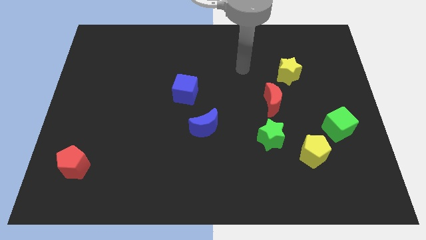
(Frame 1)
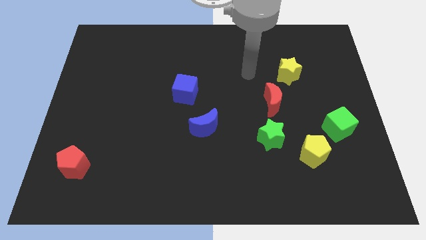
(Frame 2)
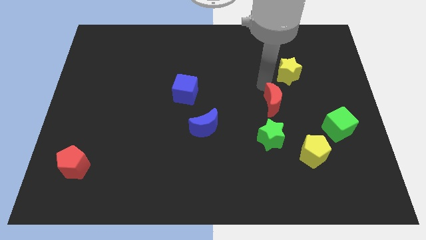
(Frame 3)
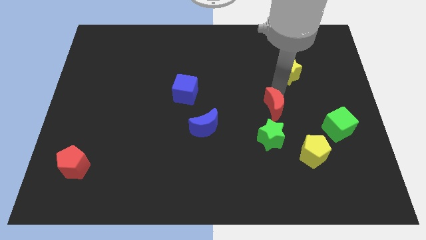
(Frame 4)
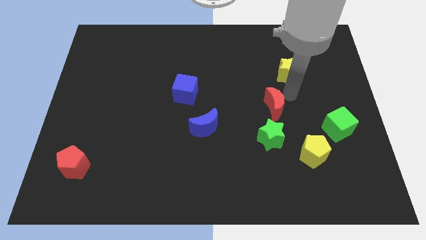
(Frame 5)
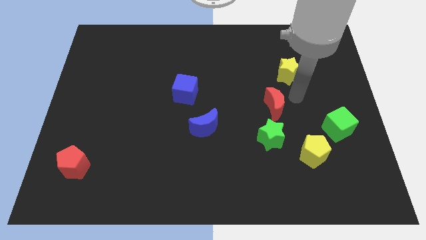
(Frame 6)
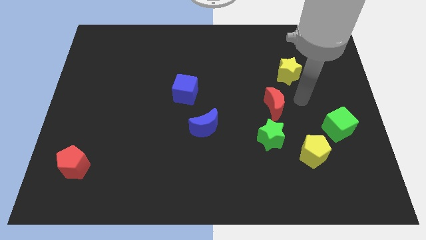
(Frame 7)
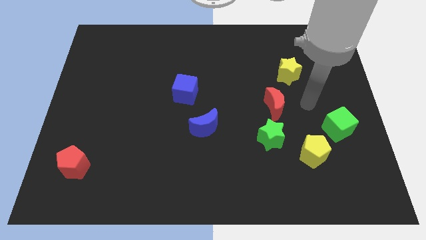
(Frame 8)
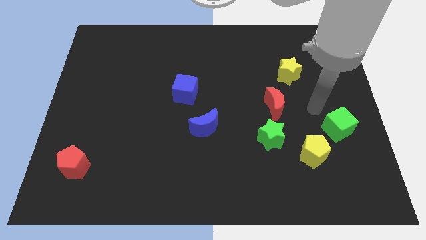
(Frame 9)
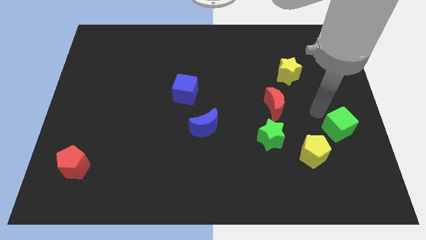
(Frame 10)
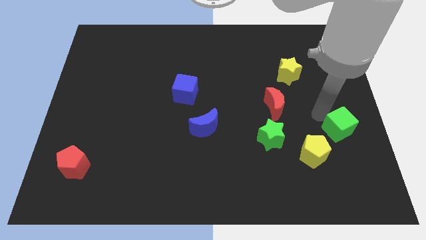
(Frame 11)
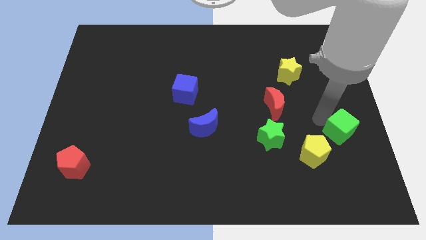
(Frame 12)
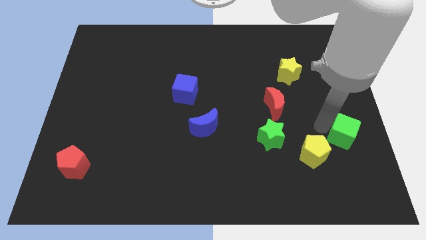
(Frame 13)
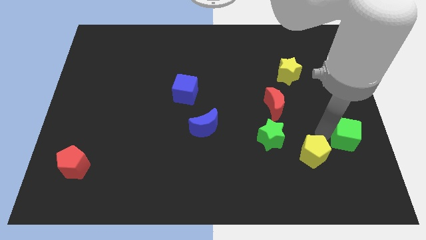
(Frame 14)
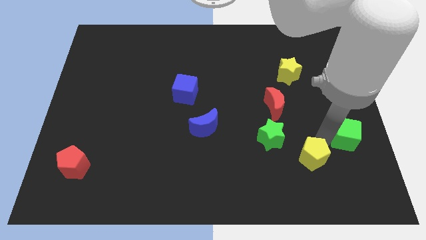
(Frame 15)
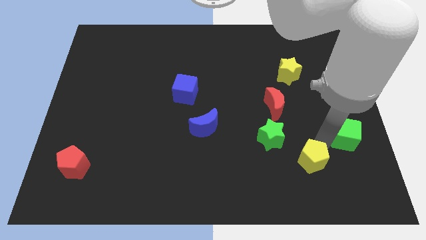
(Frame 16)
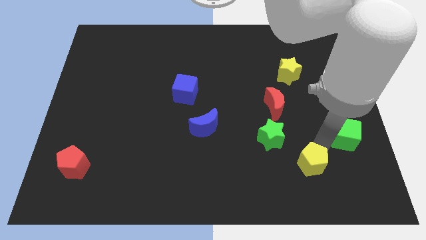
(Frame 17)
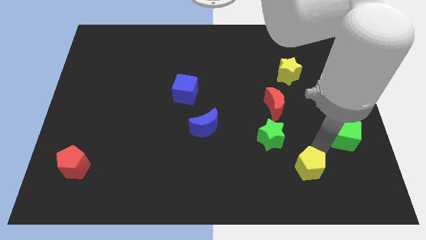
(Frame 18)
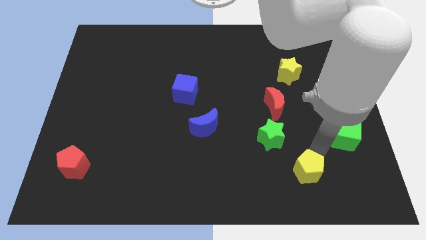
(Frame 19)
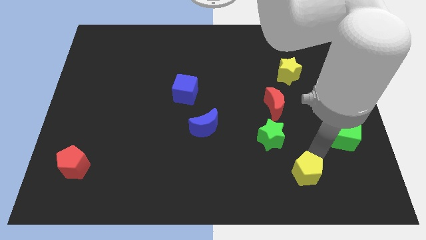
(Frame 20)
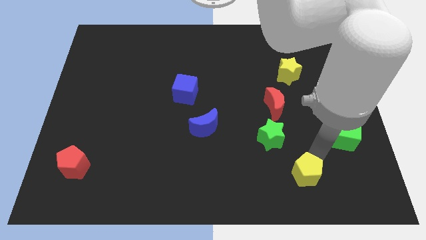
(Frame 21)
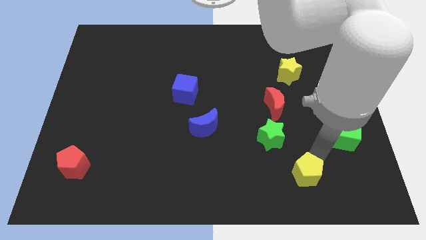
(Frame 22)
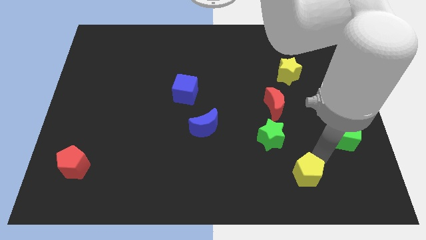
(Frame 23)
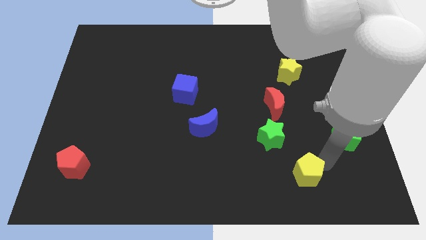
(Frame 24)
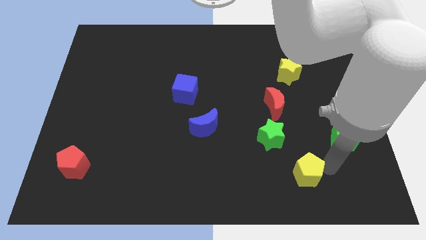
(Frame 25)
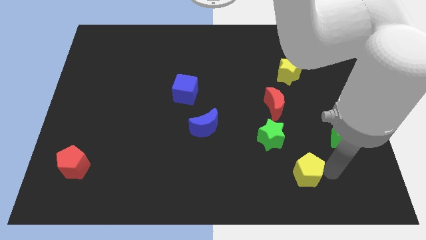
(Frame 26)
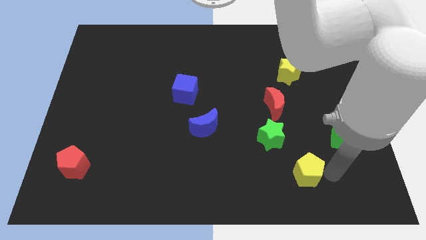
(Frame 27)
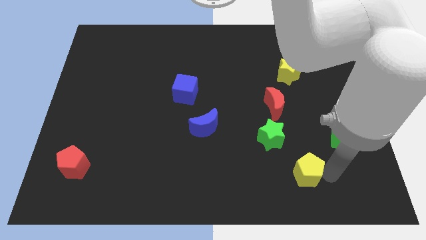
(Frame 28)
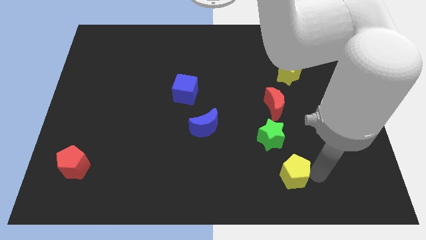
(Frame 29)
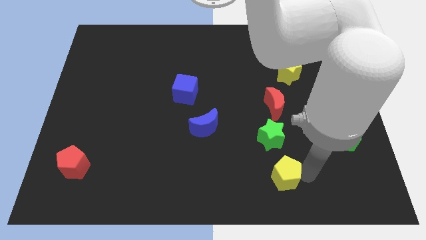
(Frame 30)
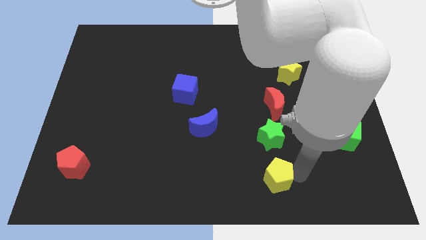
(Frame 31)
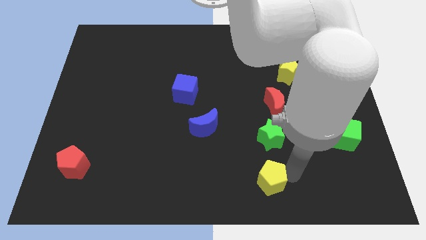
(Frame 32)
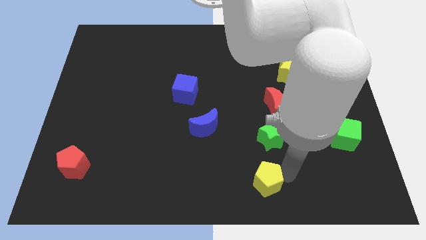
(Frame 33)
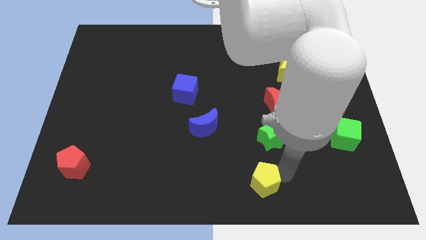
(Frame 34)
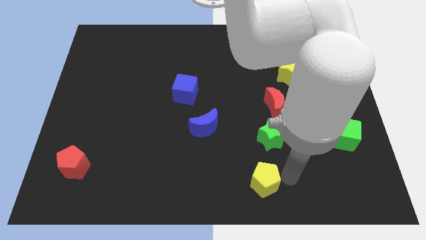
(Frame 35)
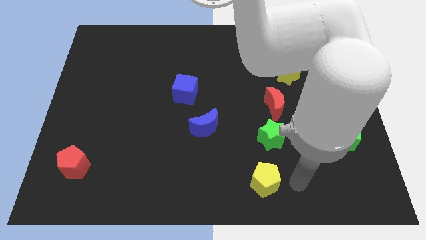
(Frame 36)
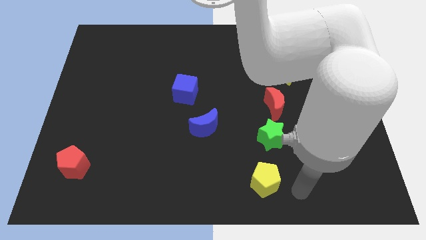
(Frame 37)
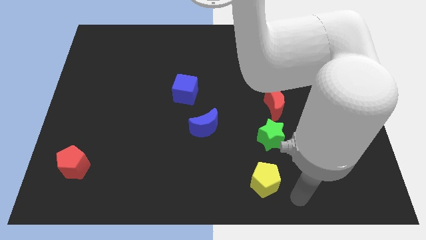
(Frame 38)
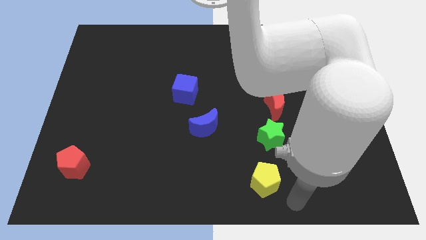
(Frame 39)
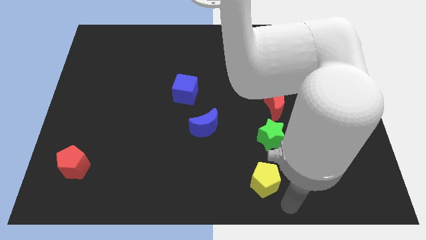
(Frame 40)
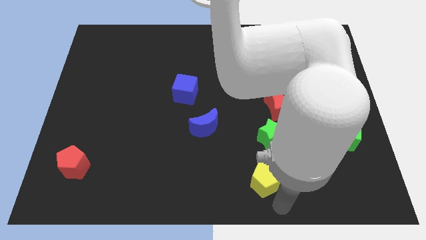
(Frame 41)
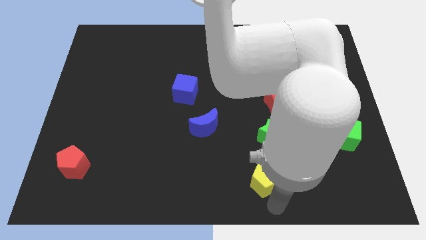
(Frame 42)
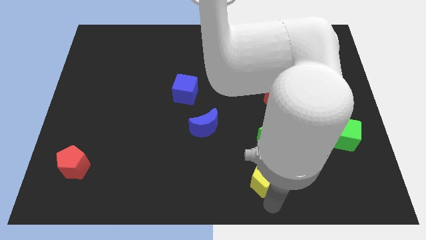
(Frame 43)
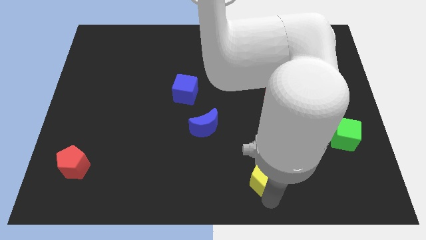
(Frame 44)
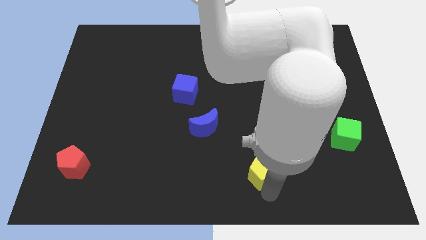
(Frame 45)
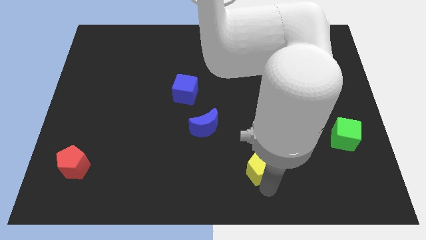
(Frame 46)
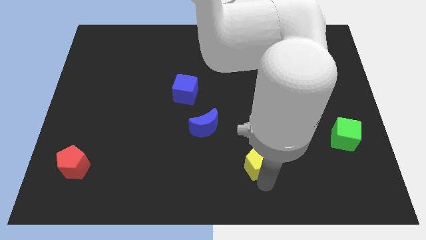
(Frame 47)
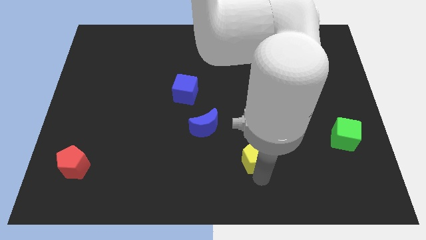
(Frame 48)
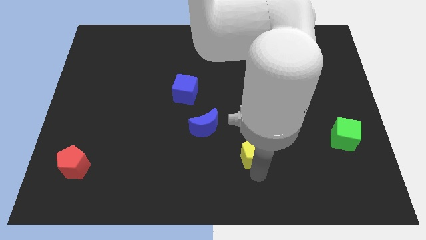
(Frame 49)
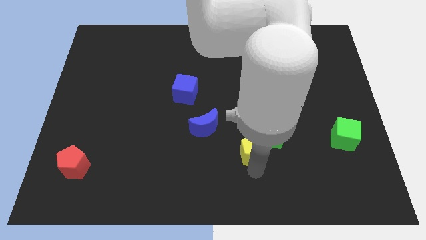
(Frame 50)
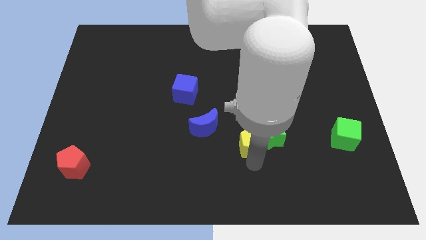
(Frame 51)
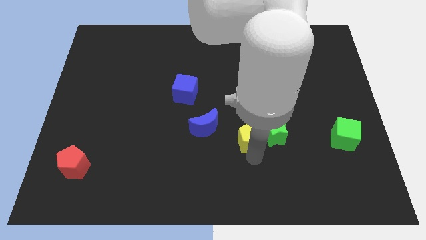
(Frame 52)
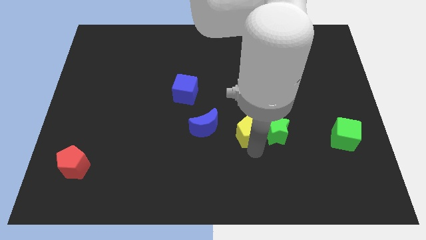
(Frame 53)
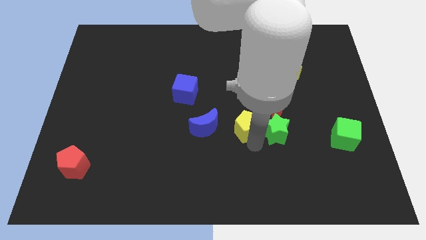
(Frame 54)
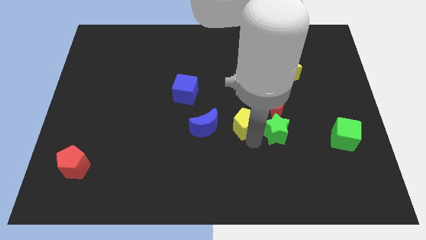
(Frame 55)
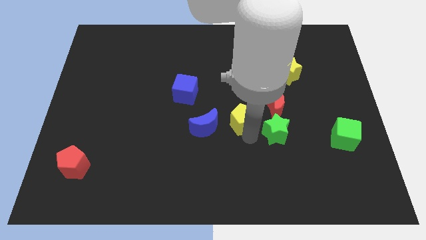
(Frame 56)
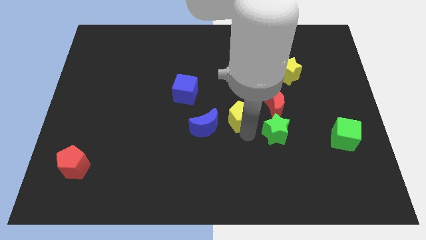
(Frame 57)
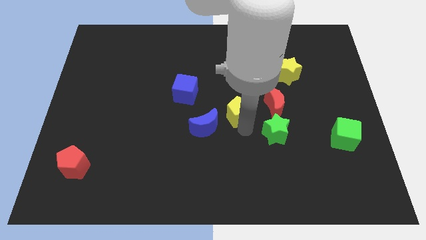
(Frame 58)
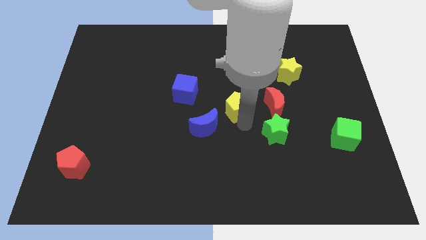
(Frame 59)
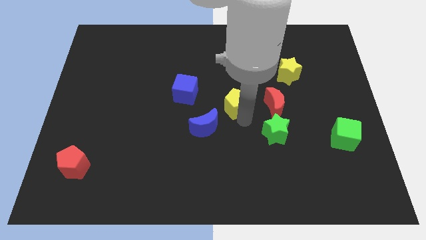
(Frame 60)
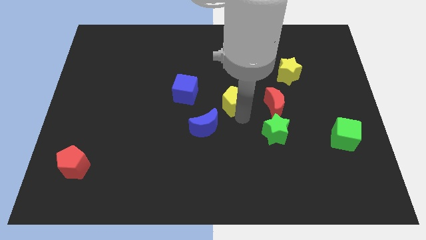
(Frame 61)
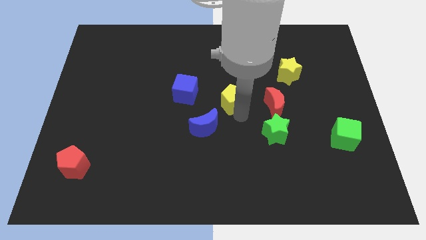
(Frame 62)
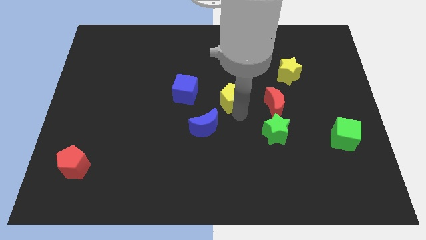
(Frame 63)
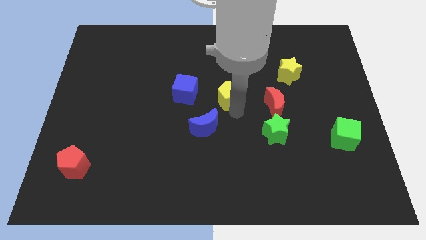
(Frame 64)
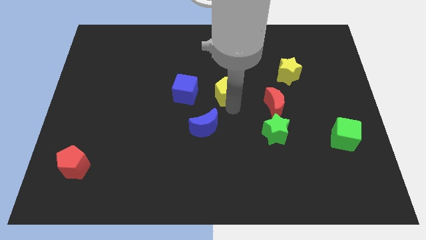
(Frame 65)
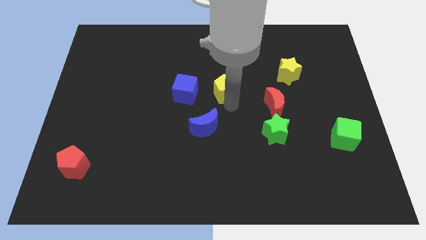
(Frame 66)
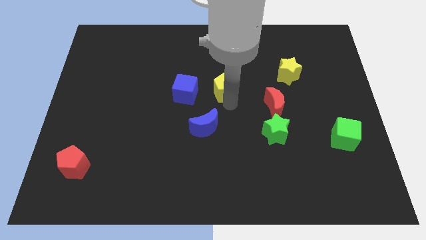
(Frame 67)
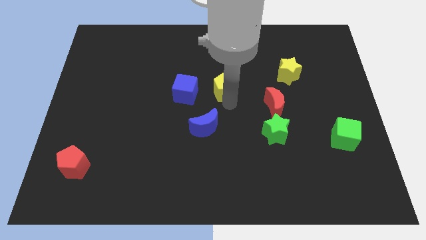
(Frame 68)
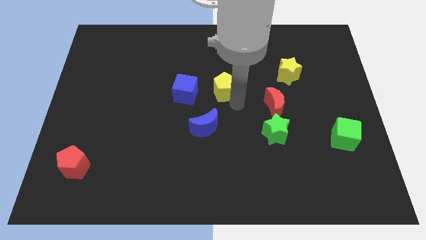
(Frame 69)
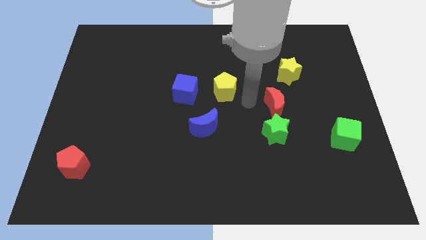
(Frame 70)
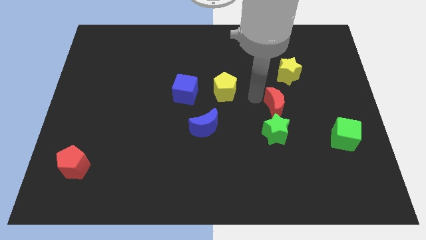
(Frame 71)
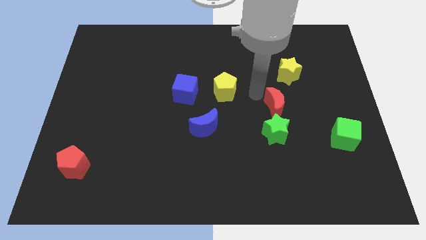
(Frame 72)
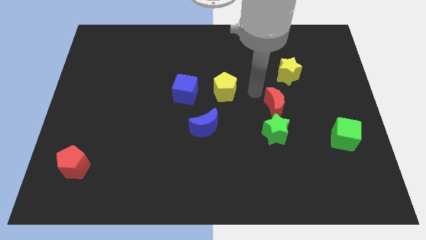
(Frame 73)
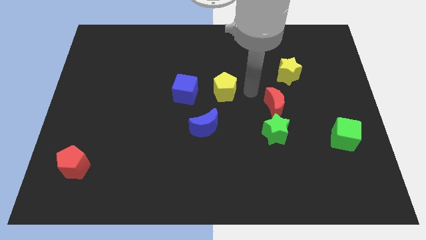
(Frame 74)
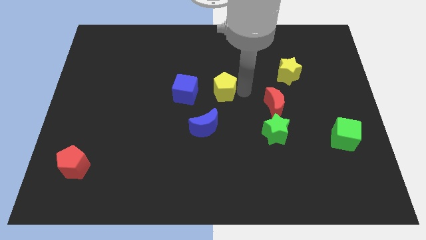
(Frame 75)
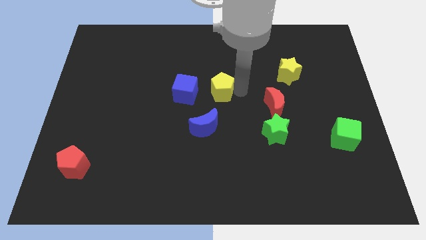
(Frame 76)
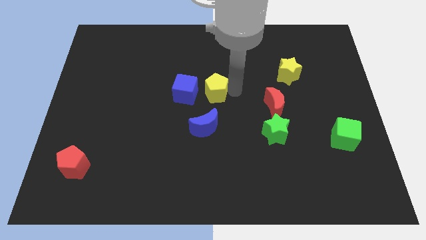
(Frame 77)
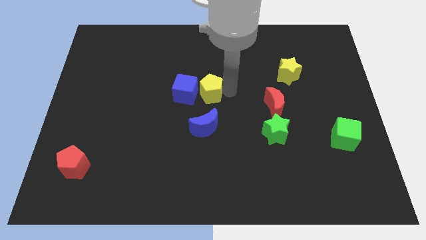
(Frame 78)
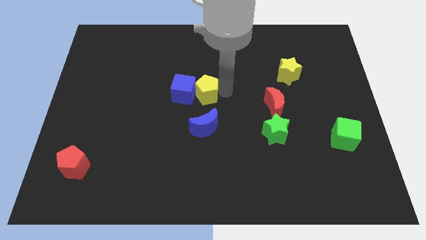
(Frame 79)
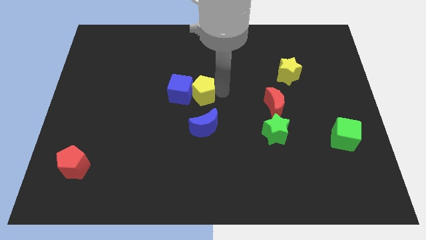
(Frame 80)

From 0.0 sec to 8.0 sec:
slide the yellow pentagon to the blue cube
